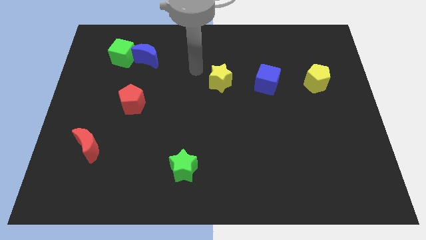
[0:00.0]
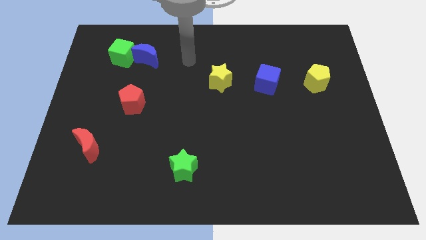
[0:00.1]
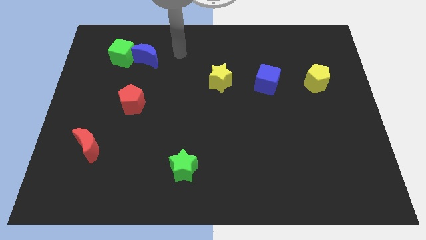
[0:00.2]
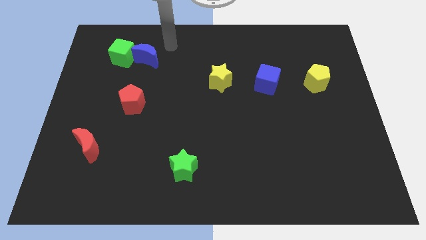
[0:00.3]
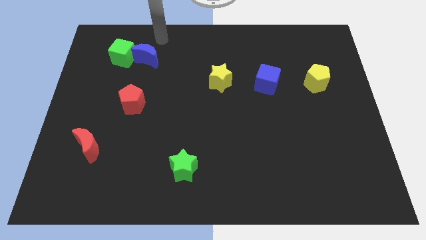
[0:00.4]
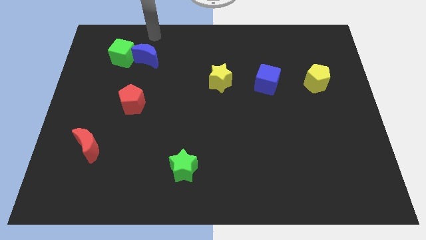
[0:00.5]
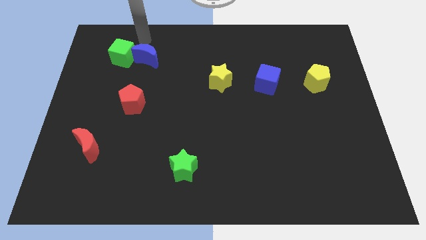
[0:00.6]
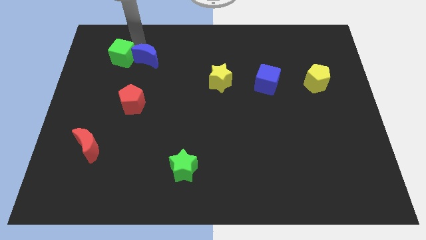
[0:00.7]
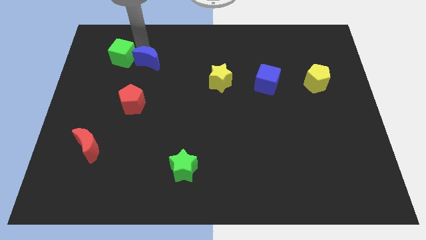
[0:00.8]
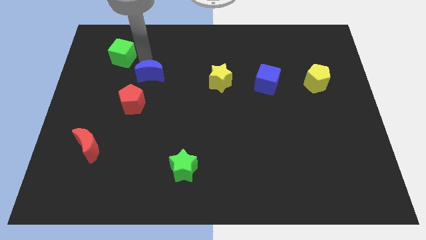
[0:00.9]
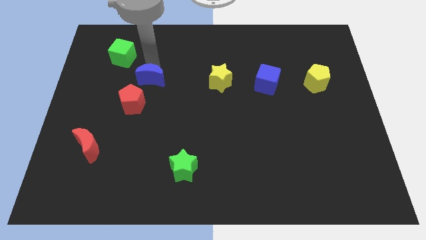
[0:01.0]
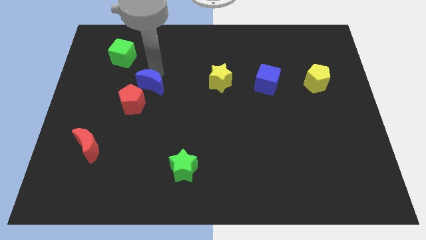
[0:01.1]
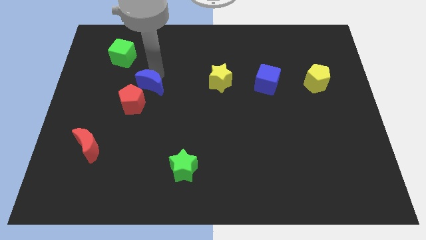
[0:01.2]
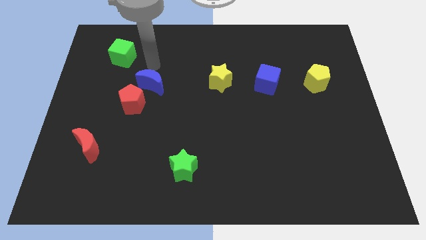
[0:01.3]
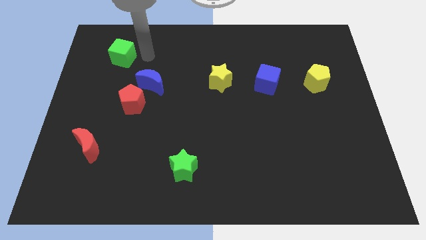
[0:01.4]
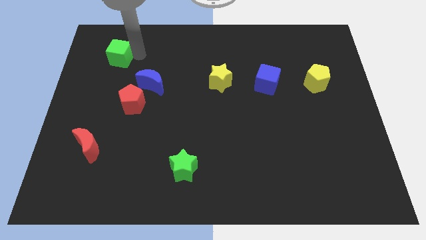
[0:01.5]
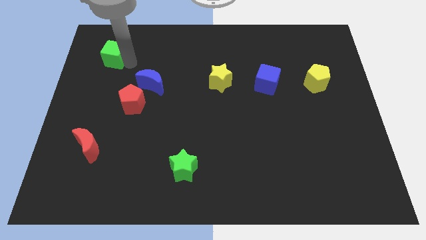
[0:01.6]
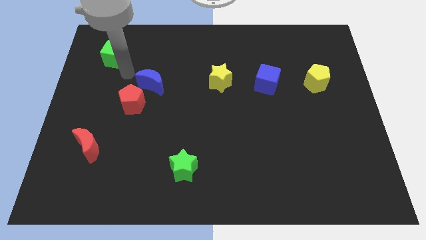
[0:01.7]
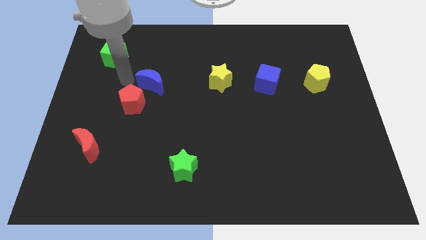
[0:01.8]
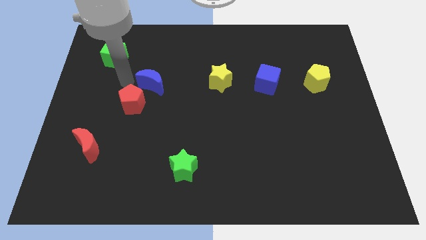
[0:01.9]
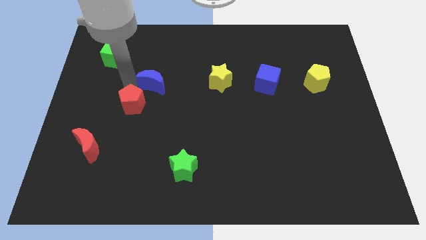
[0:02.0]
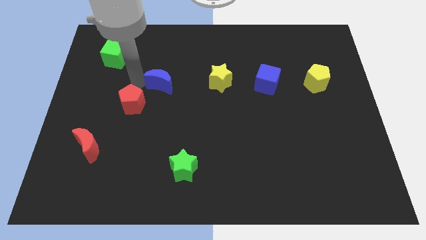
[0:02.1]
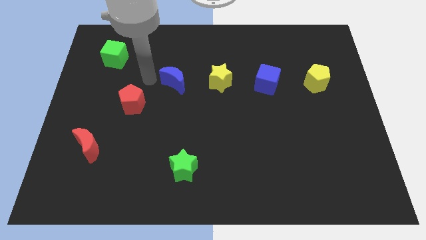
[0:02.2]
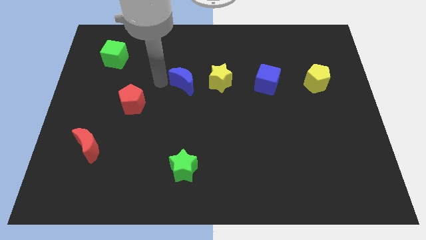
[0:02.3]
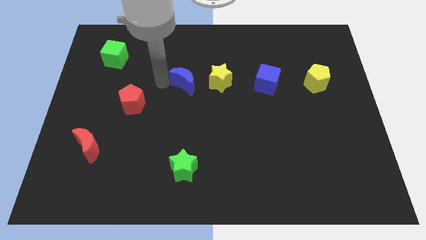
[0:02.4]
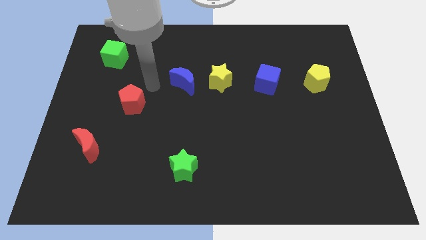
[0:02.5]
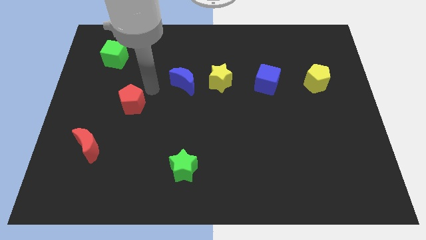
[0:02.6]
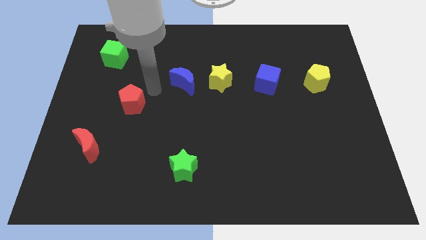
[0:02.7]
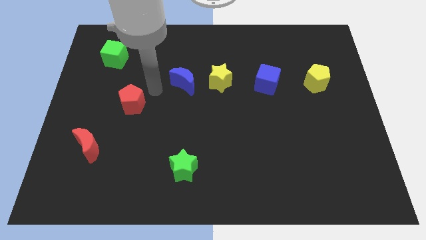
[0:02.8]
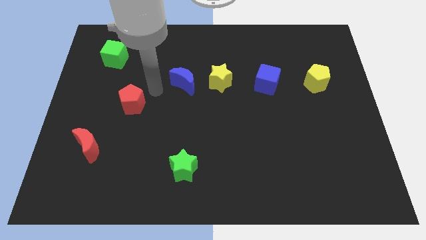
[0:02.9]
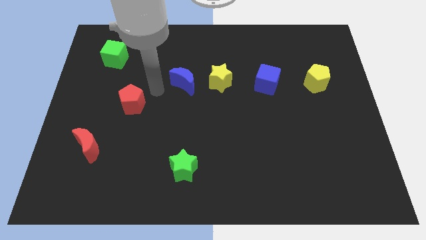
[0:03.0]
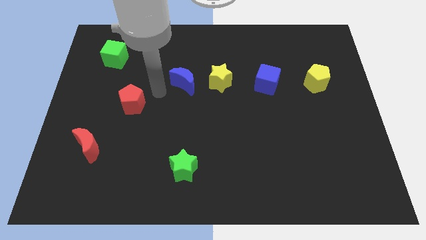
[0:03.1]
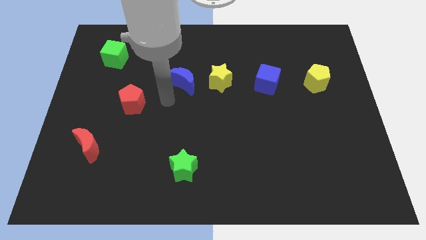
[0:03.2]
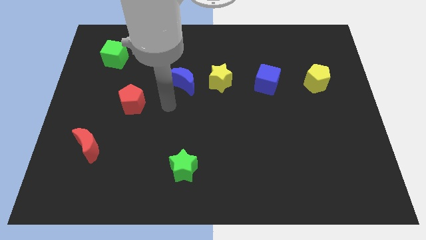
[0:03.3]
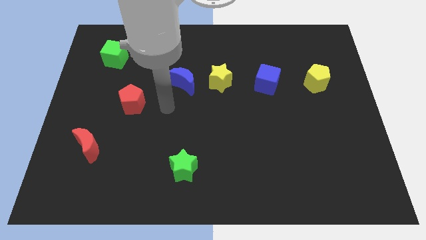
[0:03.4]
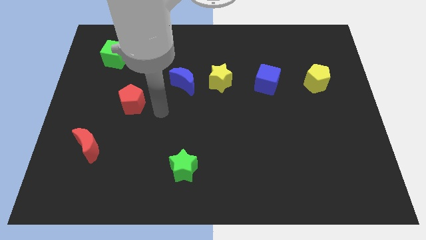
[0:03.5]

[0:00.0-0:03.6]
move the blue crescent to the left side of the yellow star

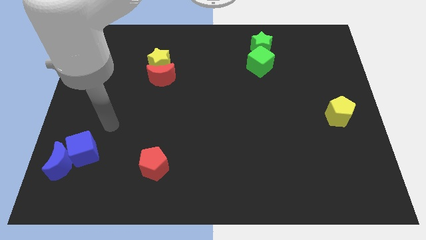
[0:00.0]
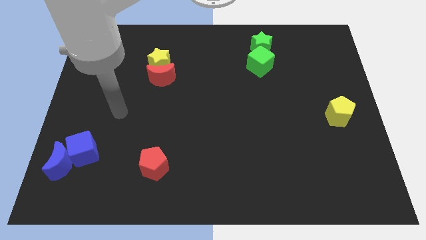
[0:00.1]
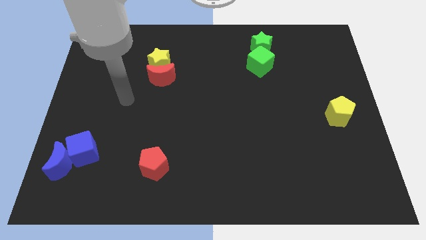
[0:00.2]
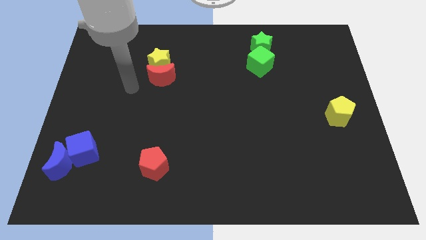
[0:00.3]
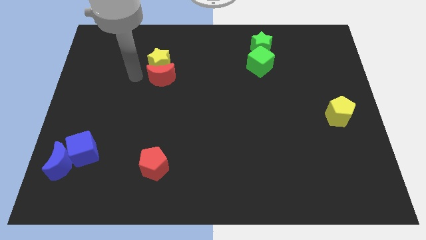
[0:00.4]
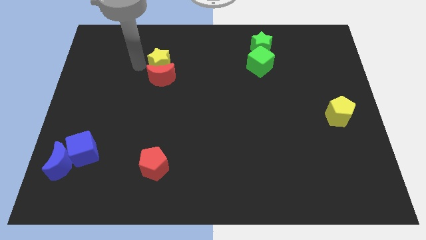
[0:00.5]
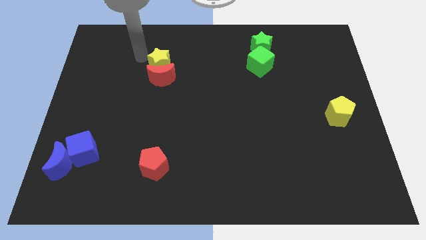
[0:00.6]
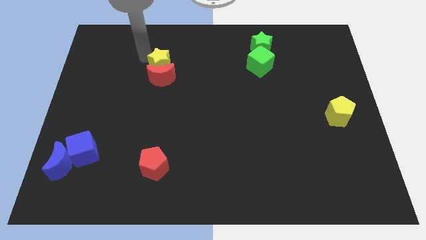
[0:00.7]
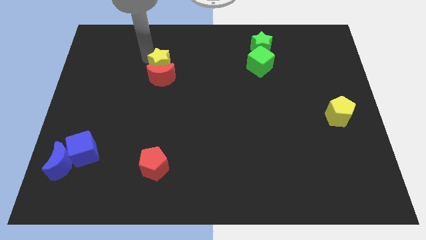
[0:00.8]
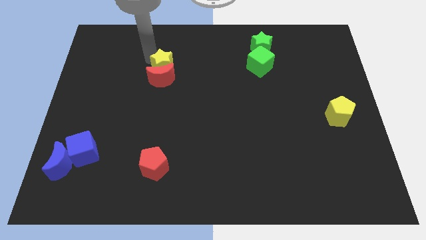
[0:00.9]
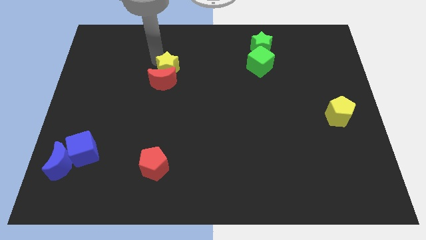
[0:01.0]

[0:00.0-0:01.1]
touch the top left edge of yellow star

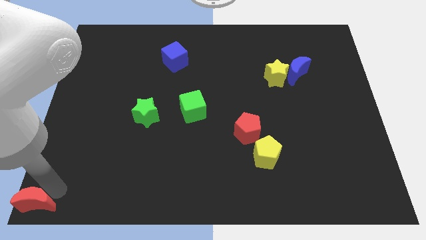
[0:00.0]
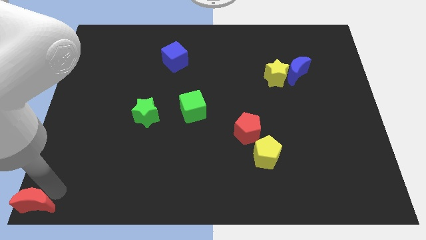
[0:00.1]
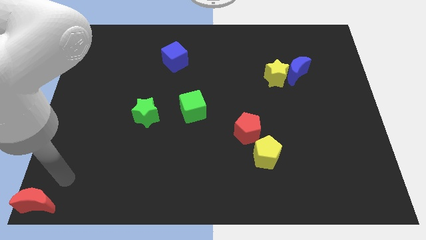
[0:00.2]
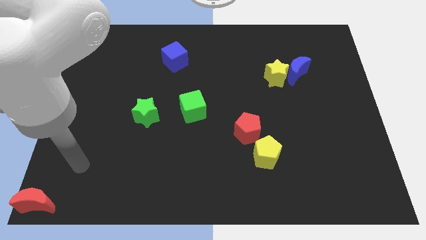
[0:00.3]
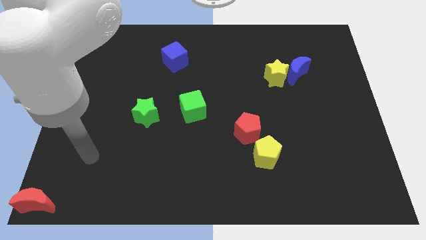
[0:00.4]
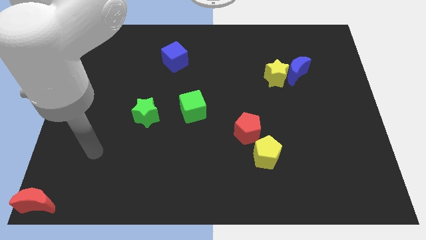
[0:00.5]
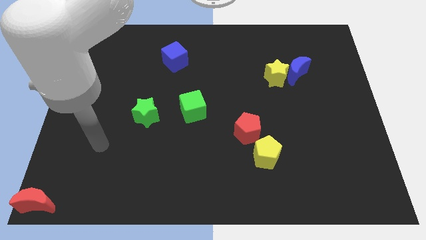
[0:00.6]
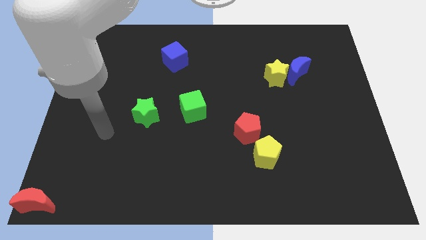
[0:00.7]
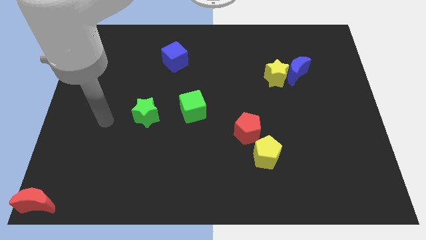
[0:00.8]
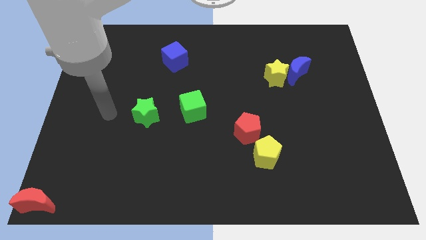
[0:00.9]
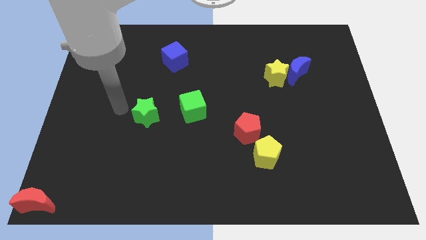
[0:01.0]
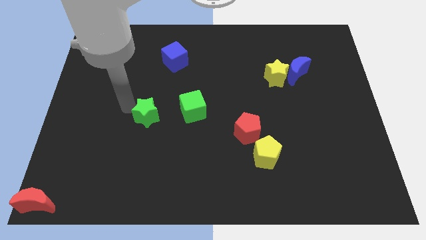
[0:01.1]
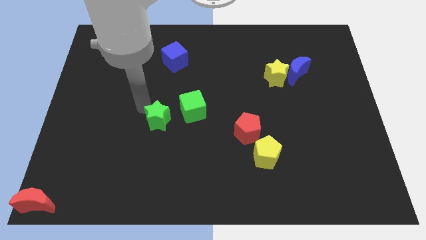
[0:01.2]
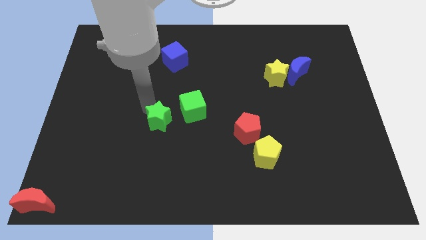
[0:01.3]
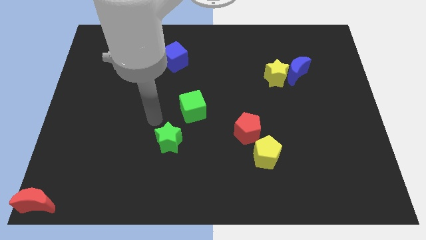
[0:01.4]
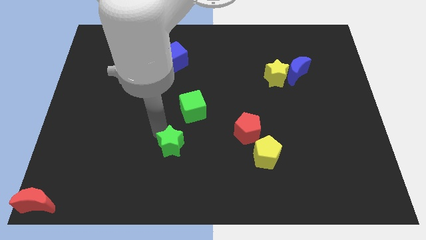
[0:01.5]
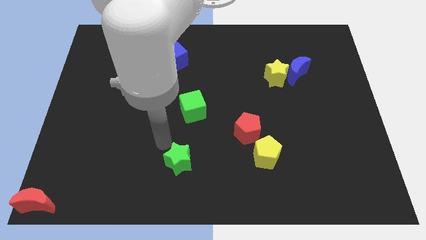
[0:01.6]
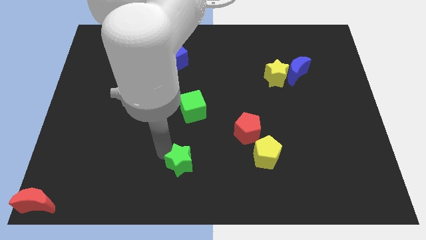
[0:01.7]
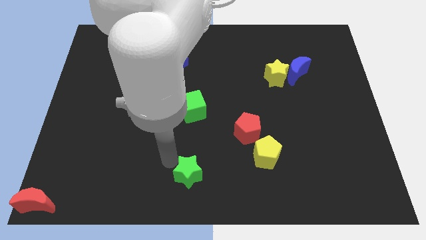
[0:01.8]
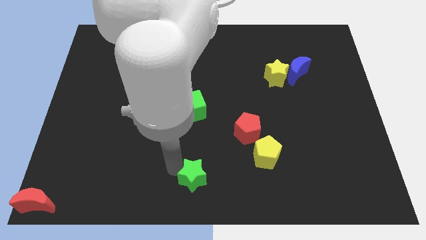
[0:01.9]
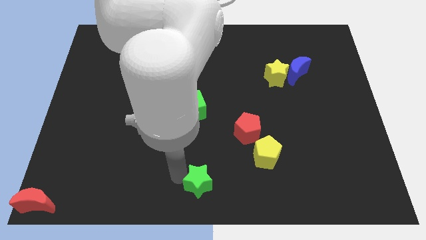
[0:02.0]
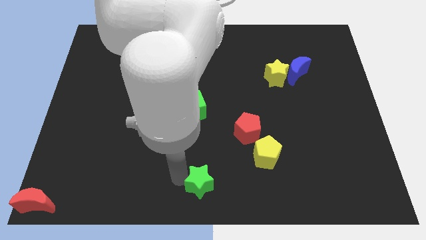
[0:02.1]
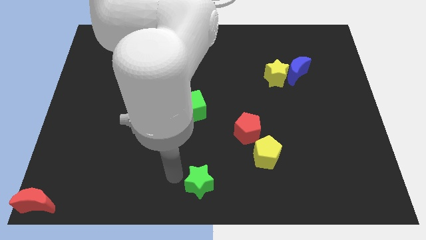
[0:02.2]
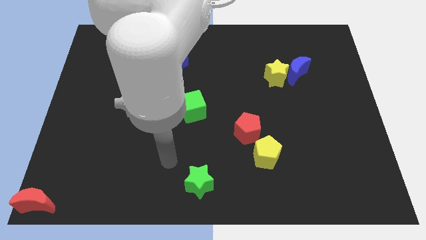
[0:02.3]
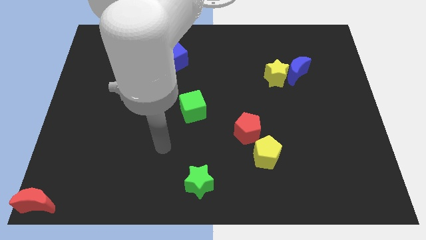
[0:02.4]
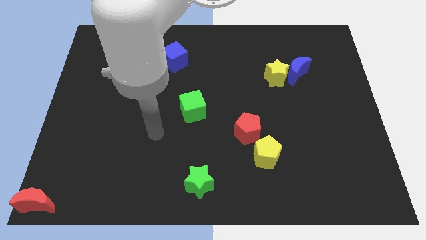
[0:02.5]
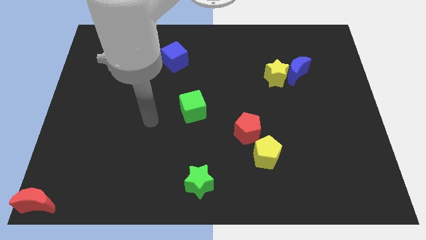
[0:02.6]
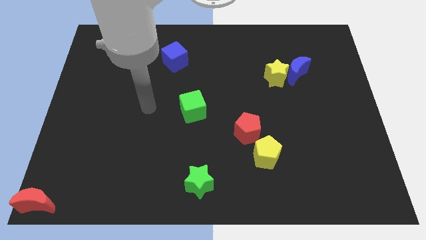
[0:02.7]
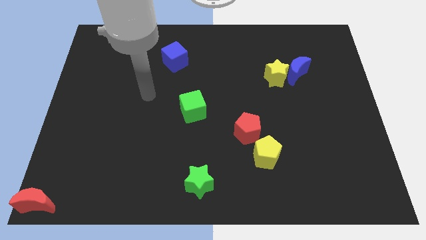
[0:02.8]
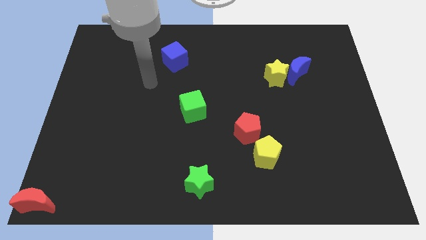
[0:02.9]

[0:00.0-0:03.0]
move the green star to the bottom middle

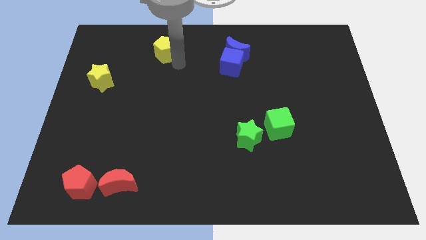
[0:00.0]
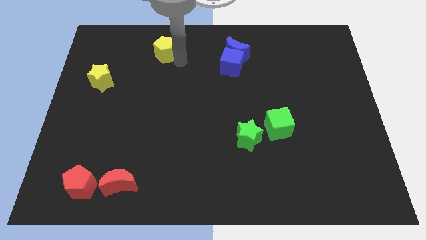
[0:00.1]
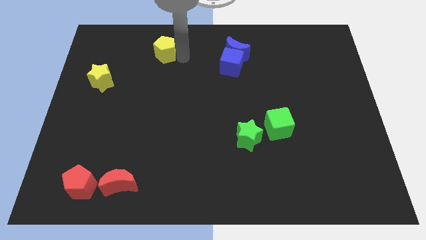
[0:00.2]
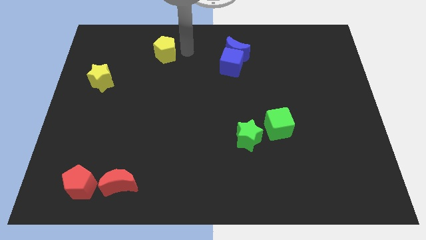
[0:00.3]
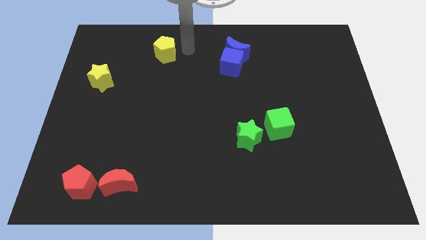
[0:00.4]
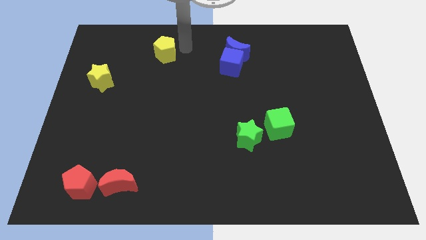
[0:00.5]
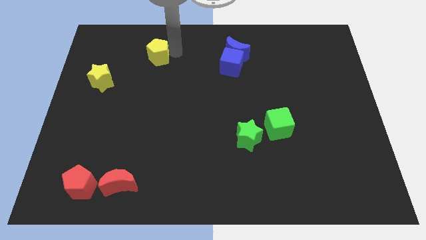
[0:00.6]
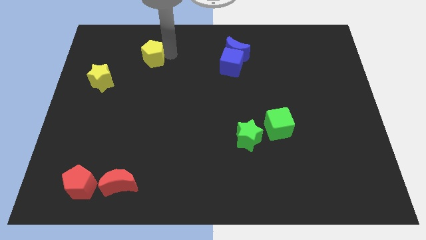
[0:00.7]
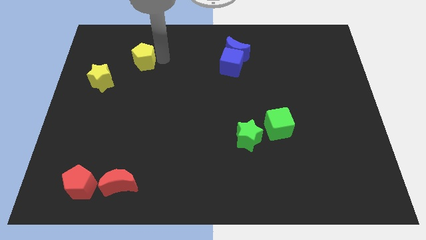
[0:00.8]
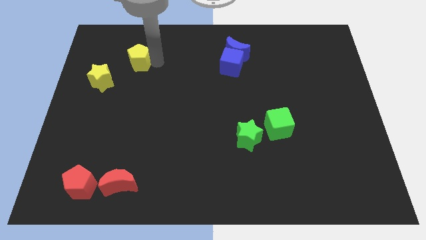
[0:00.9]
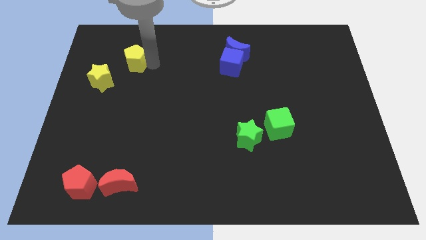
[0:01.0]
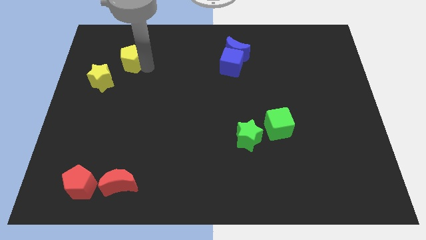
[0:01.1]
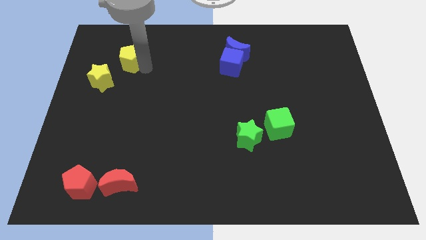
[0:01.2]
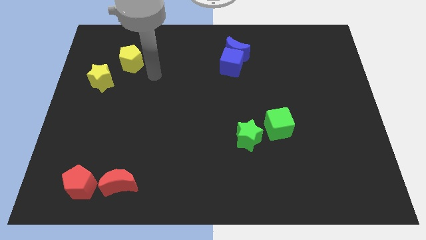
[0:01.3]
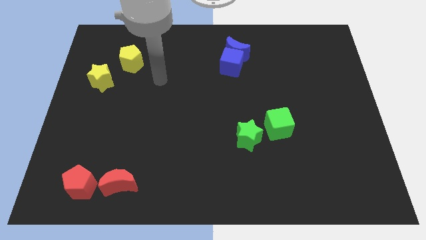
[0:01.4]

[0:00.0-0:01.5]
place the yellow pentagon to the top right of yellow star
